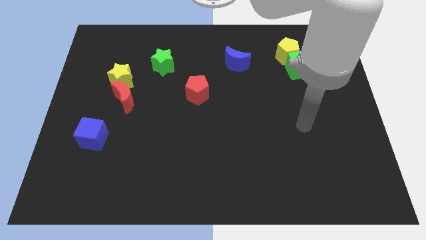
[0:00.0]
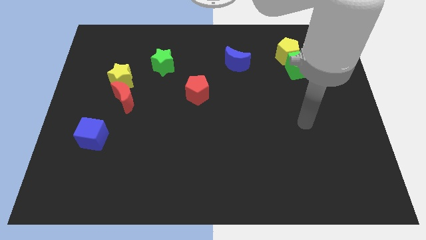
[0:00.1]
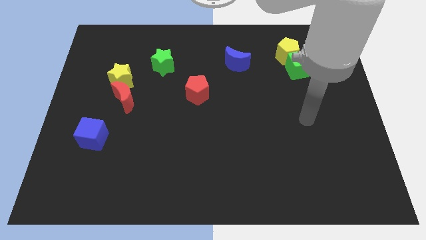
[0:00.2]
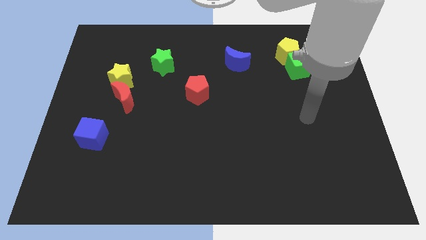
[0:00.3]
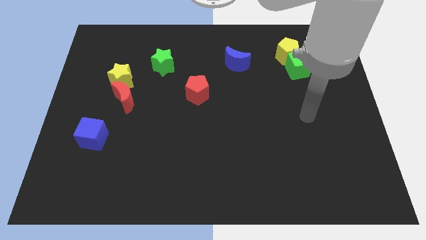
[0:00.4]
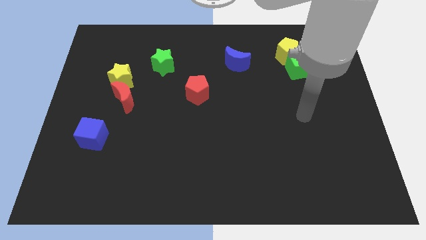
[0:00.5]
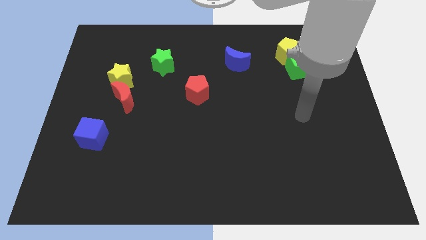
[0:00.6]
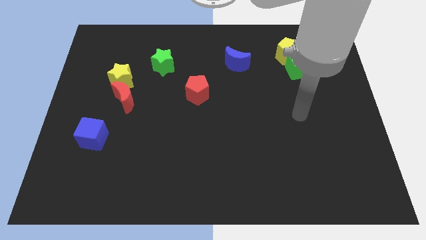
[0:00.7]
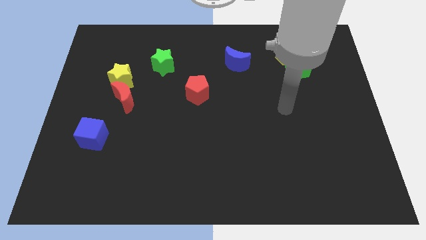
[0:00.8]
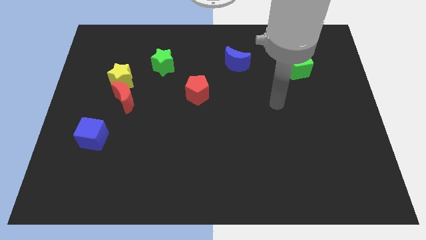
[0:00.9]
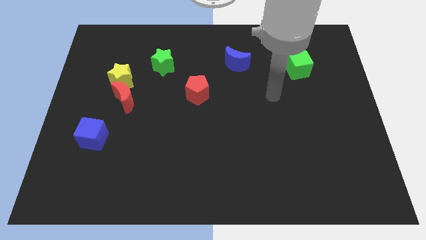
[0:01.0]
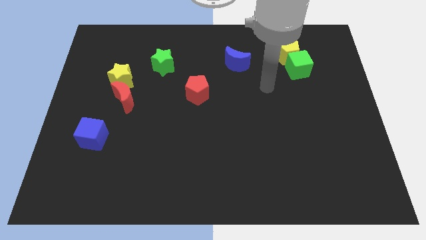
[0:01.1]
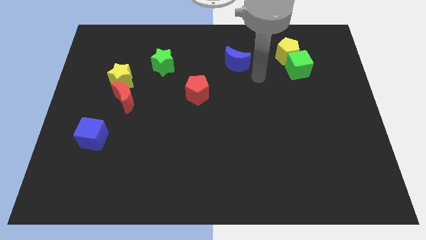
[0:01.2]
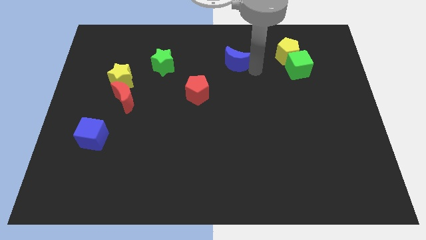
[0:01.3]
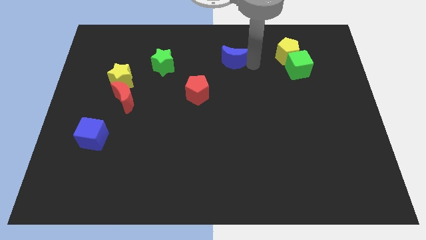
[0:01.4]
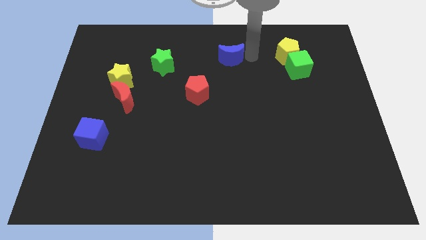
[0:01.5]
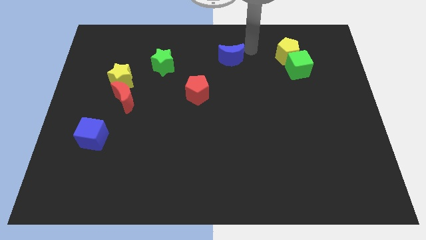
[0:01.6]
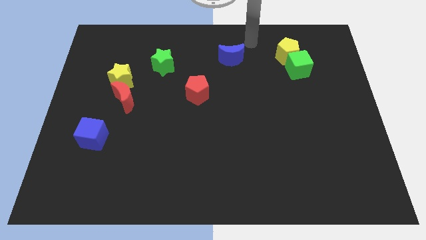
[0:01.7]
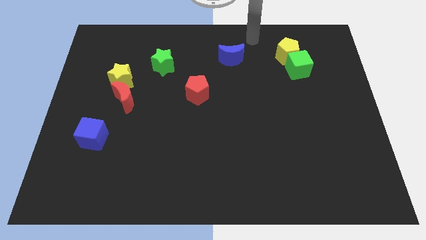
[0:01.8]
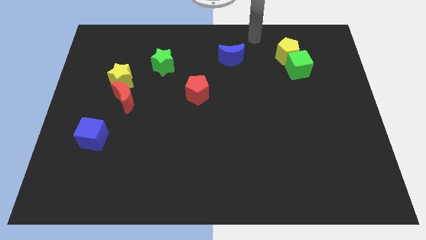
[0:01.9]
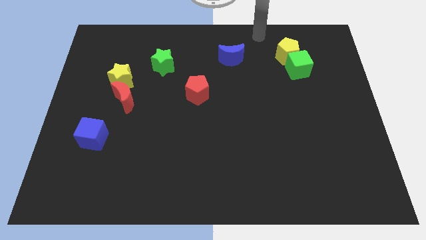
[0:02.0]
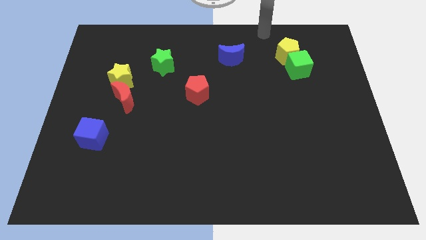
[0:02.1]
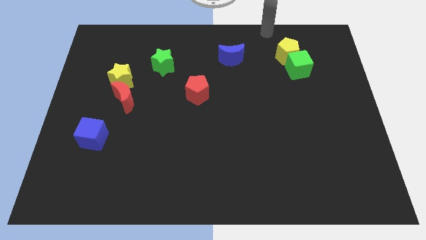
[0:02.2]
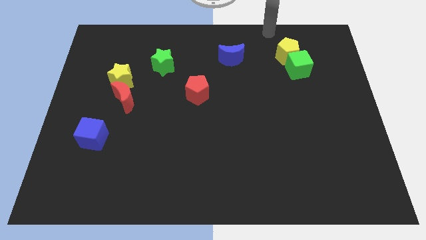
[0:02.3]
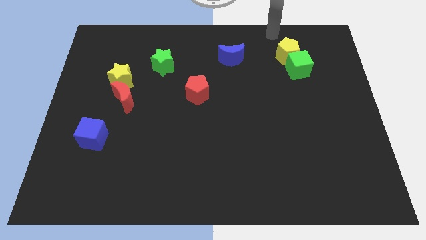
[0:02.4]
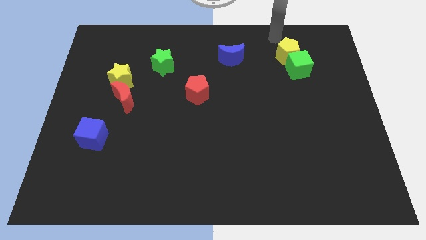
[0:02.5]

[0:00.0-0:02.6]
slightly push the blue moon towards the top center of the board

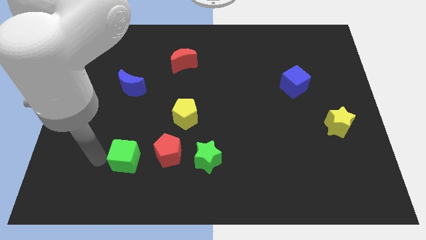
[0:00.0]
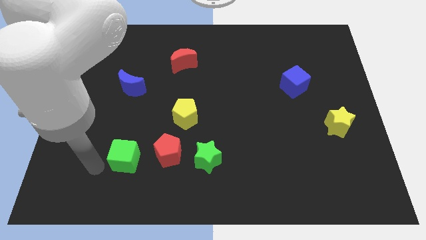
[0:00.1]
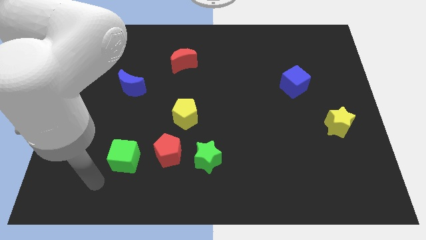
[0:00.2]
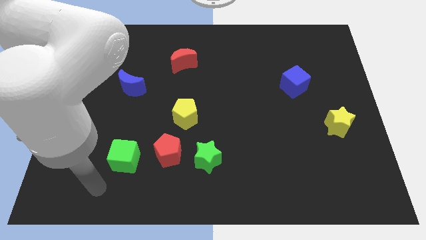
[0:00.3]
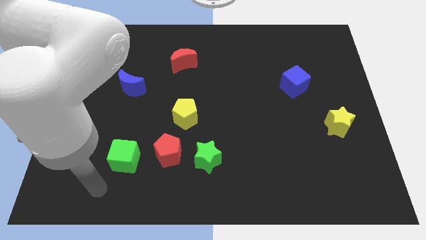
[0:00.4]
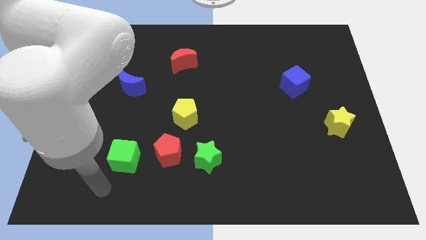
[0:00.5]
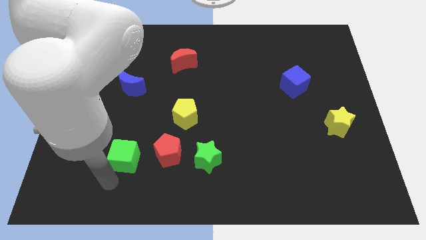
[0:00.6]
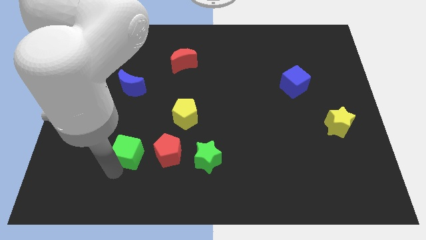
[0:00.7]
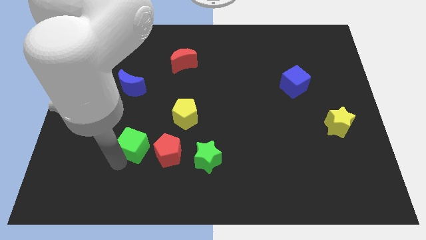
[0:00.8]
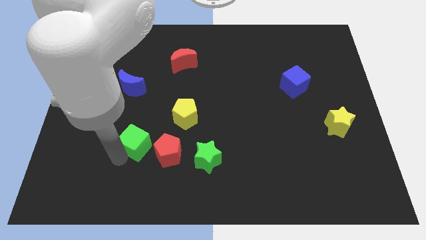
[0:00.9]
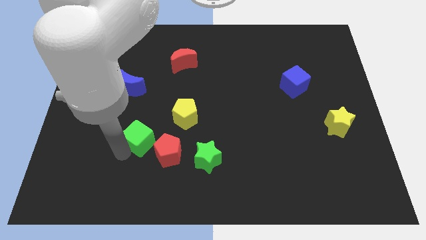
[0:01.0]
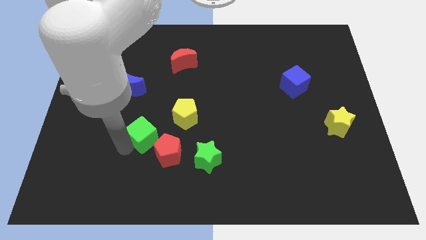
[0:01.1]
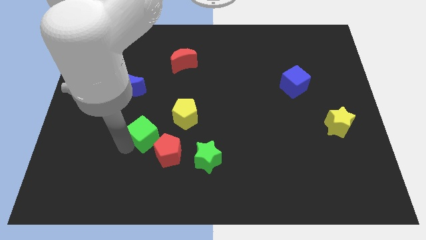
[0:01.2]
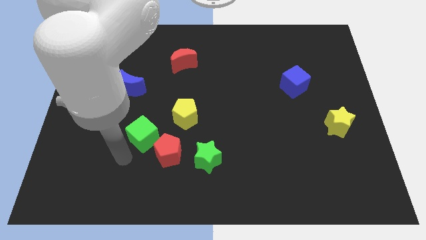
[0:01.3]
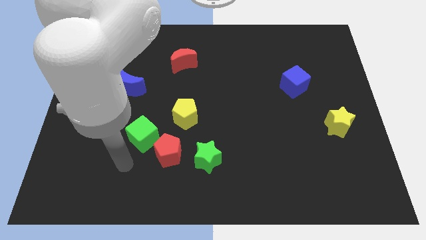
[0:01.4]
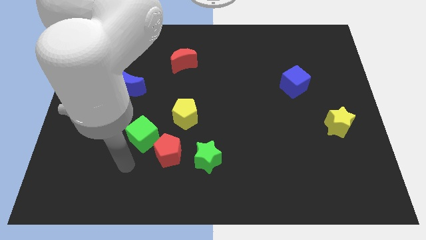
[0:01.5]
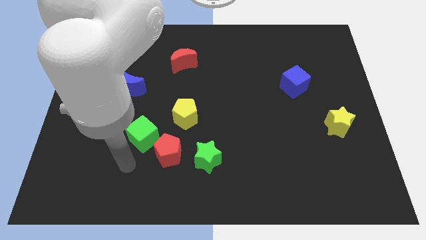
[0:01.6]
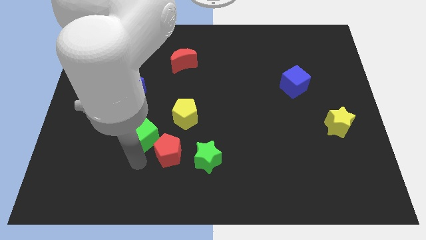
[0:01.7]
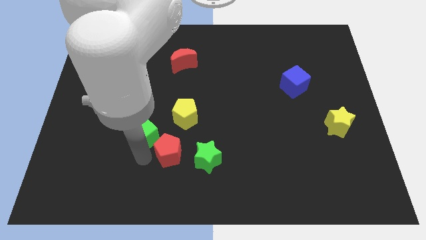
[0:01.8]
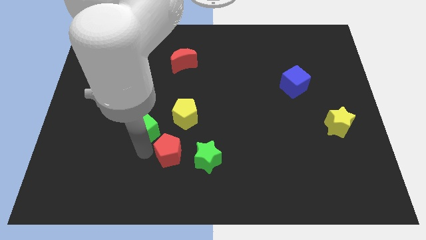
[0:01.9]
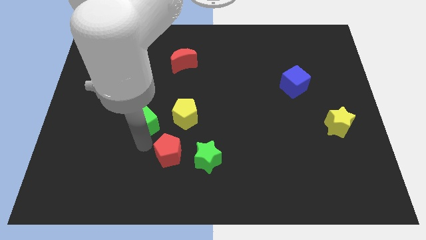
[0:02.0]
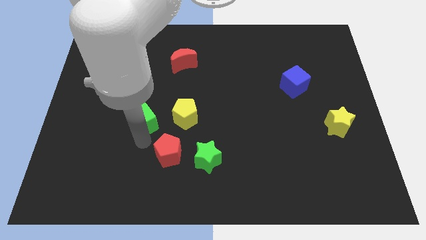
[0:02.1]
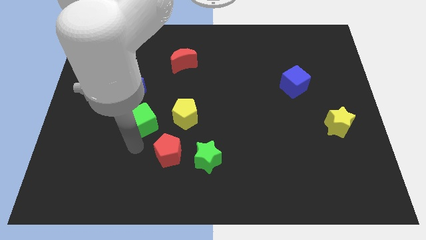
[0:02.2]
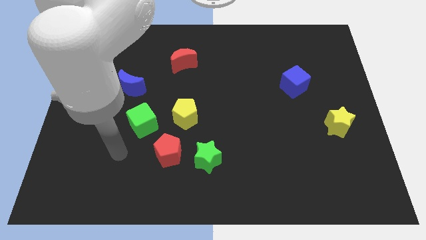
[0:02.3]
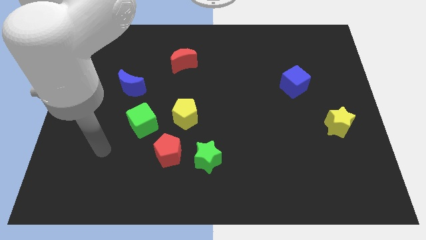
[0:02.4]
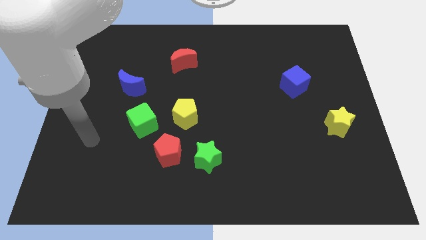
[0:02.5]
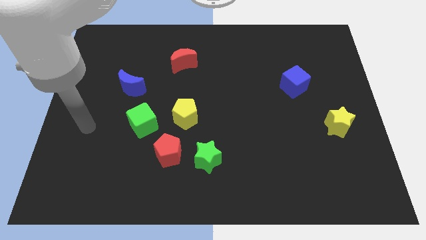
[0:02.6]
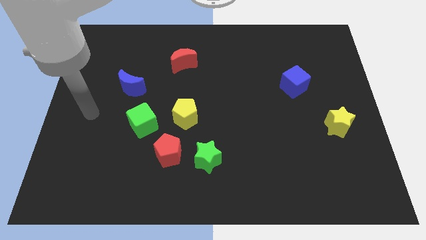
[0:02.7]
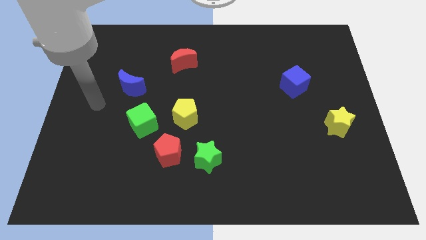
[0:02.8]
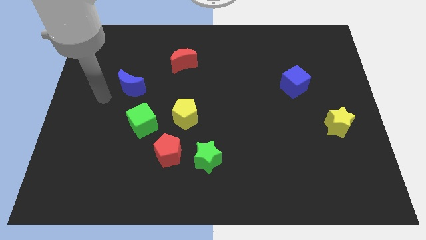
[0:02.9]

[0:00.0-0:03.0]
place the green cube between the blue moon and red pentagon

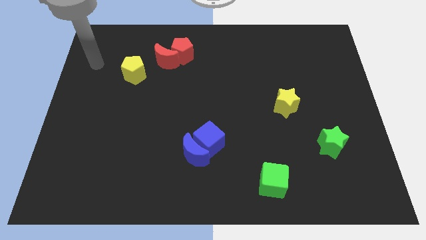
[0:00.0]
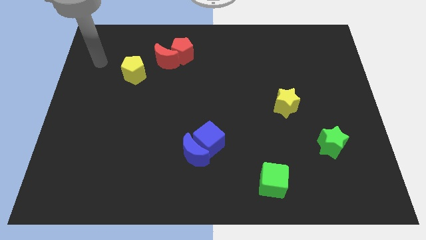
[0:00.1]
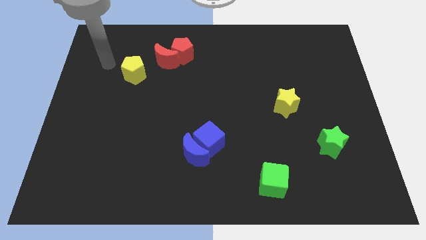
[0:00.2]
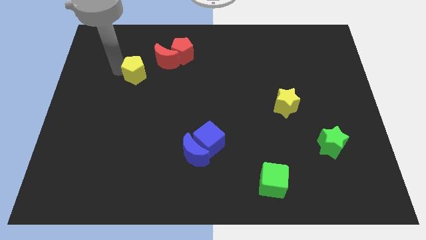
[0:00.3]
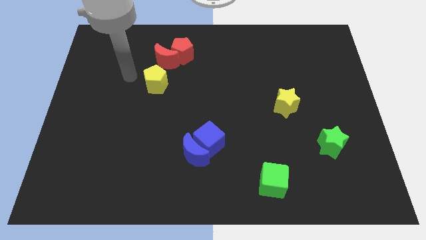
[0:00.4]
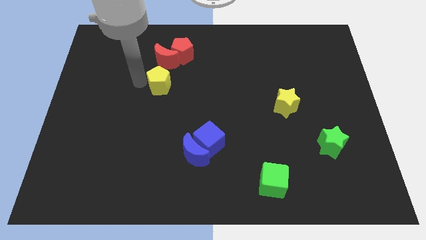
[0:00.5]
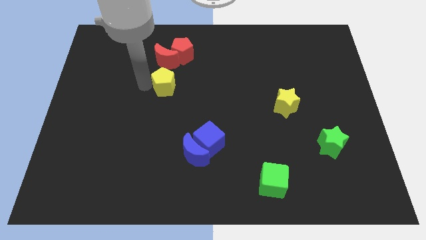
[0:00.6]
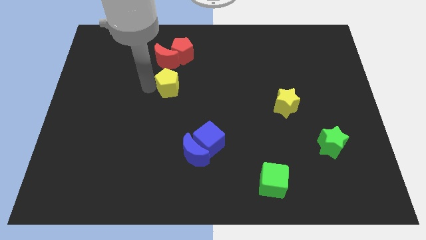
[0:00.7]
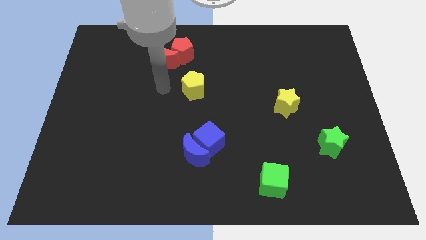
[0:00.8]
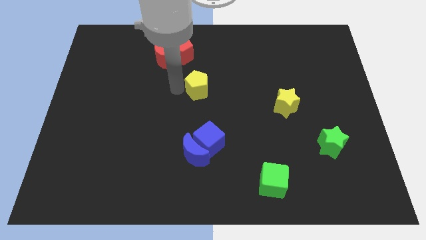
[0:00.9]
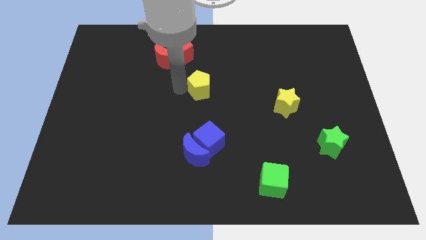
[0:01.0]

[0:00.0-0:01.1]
slide yellow pentagon towards center

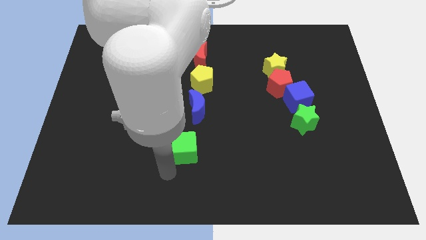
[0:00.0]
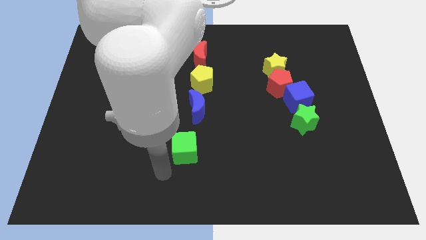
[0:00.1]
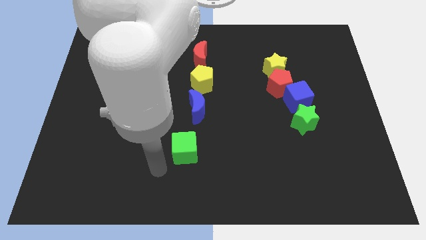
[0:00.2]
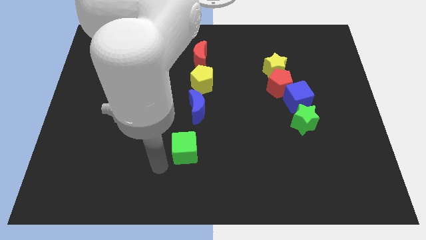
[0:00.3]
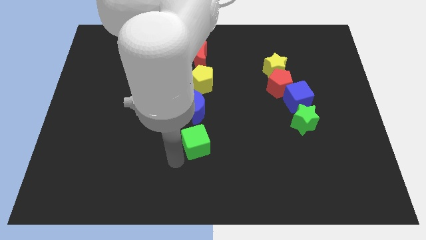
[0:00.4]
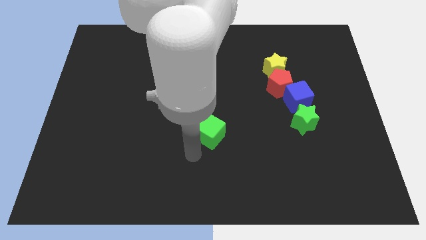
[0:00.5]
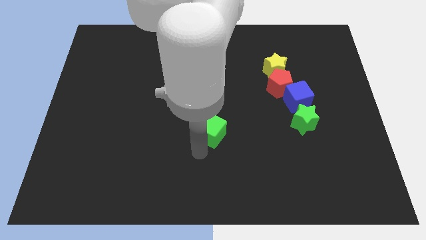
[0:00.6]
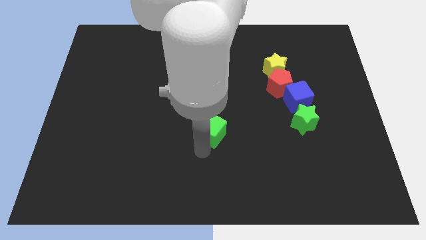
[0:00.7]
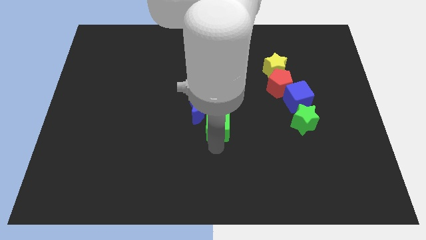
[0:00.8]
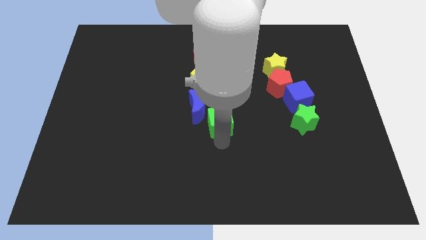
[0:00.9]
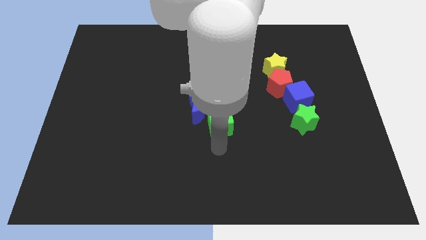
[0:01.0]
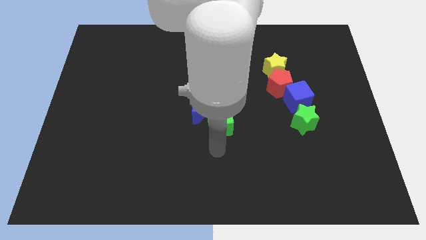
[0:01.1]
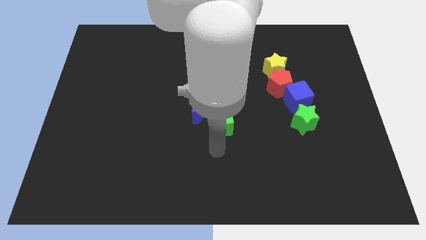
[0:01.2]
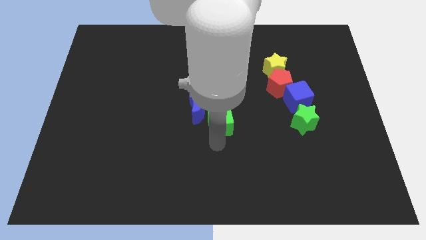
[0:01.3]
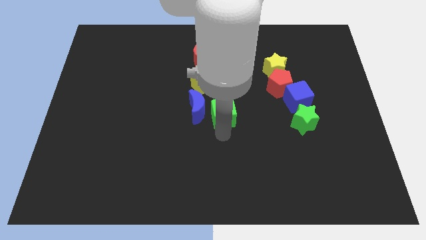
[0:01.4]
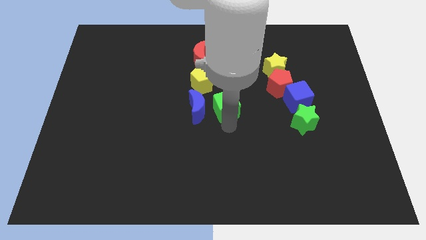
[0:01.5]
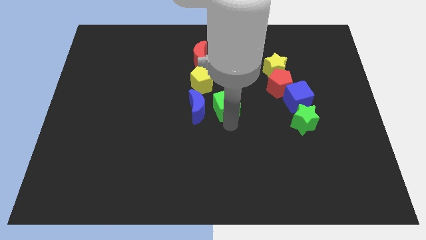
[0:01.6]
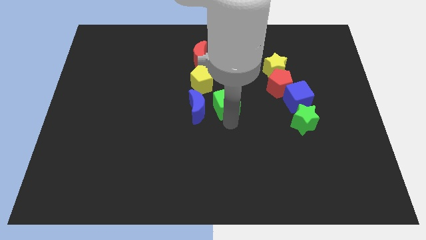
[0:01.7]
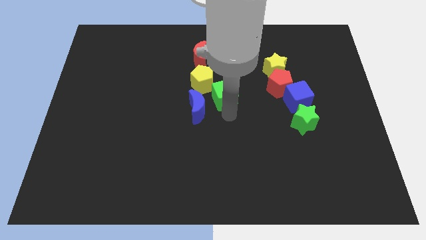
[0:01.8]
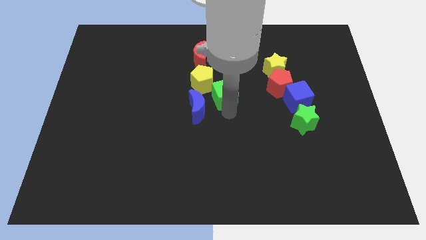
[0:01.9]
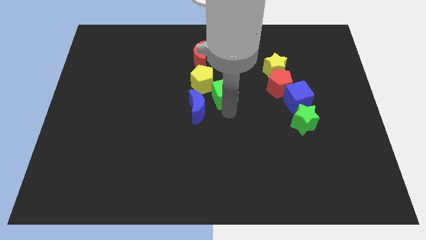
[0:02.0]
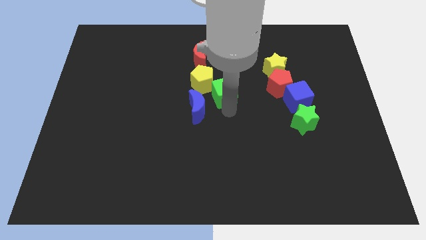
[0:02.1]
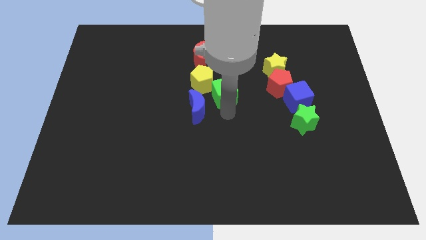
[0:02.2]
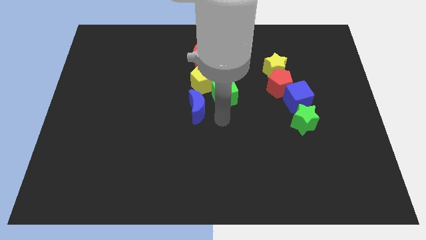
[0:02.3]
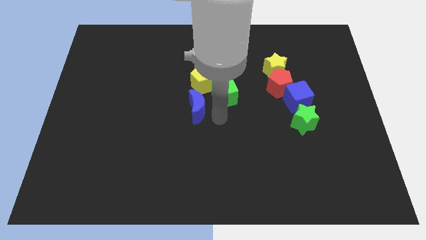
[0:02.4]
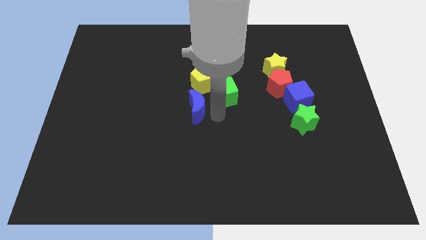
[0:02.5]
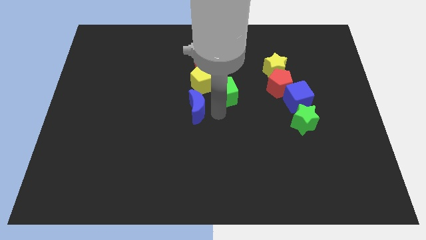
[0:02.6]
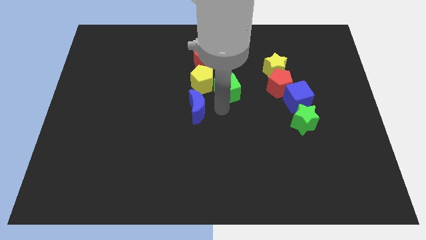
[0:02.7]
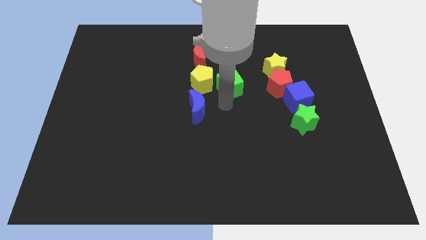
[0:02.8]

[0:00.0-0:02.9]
place the green cube right to the yellow pentagon
